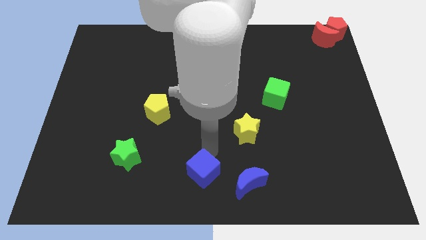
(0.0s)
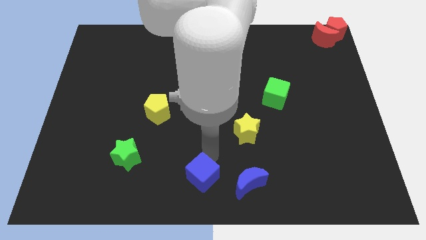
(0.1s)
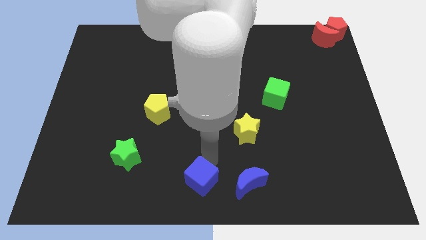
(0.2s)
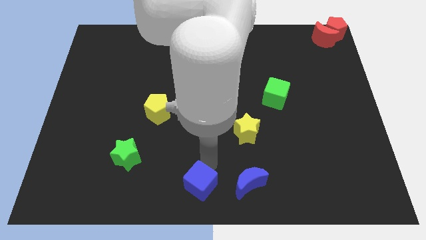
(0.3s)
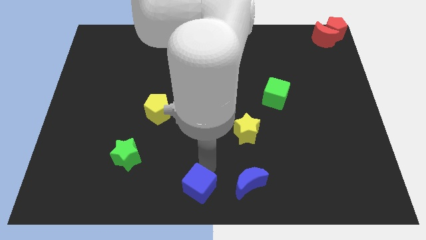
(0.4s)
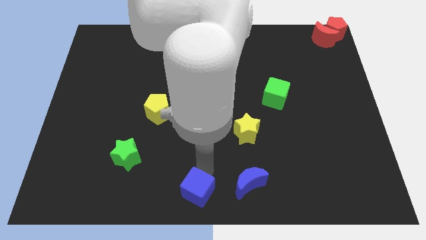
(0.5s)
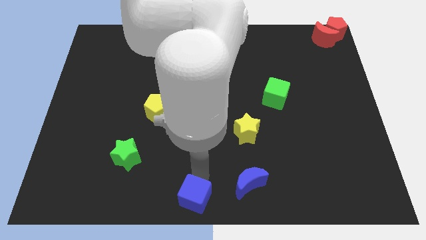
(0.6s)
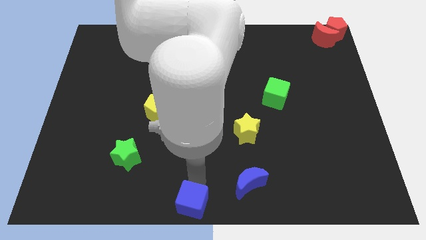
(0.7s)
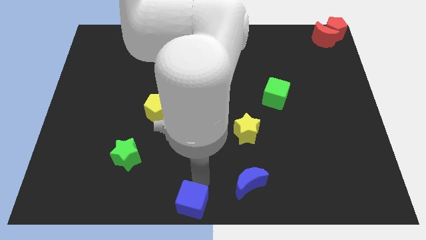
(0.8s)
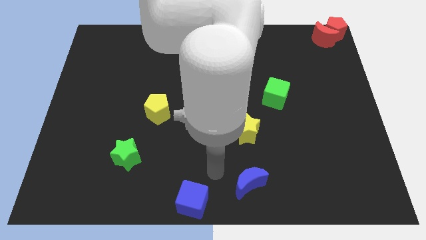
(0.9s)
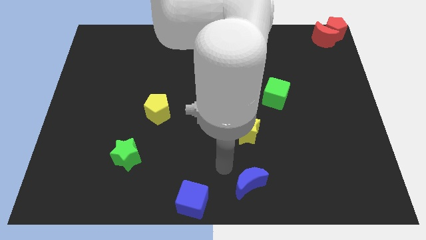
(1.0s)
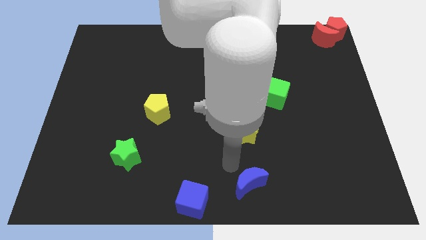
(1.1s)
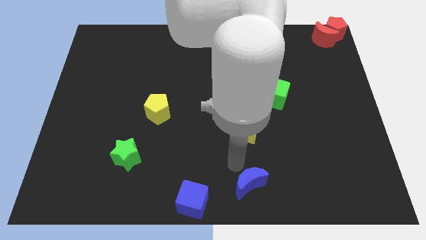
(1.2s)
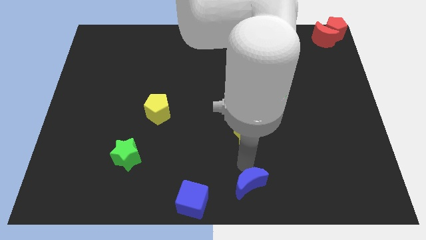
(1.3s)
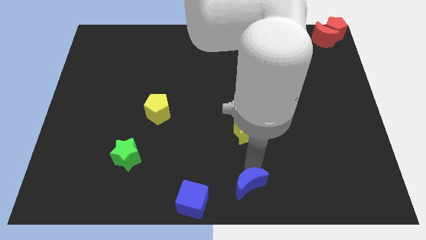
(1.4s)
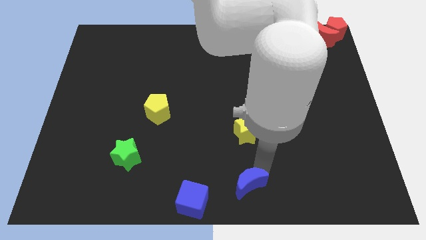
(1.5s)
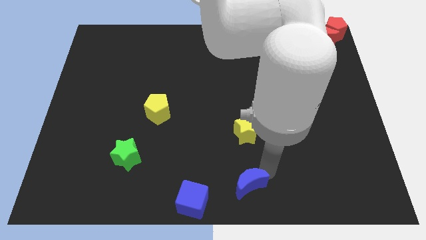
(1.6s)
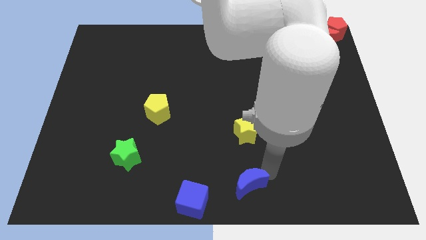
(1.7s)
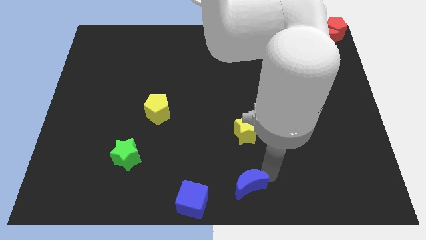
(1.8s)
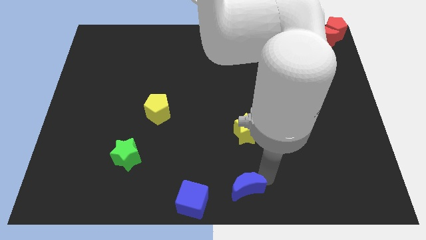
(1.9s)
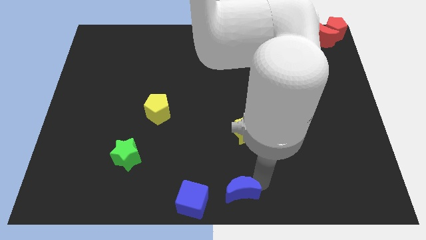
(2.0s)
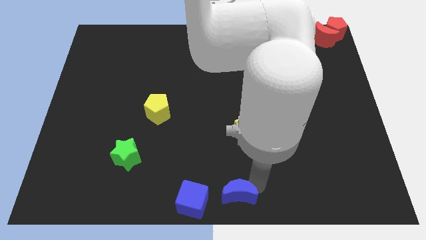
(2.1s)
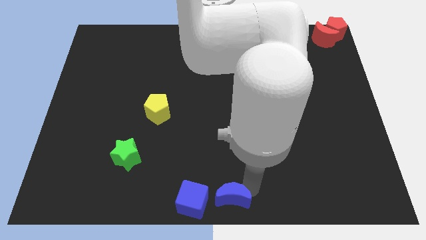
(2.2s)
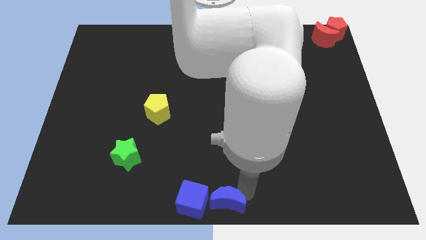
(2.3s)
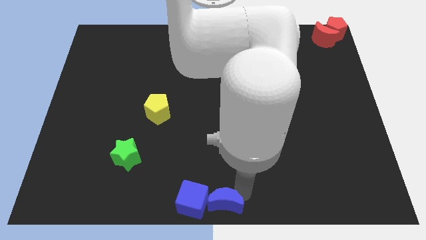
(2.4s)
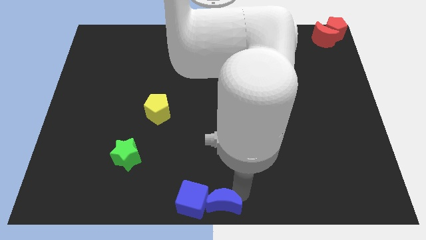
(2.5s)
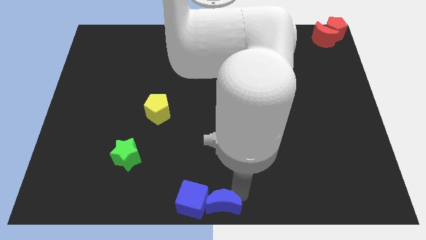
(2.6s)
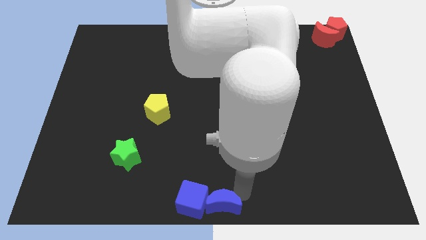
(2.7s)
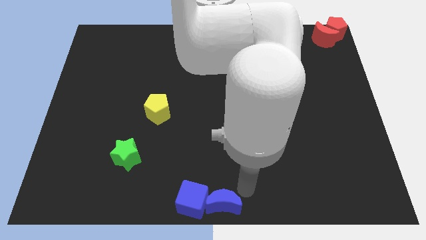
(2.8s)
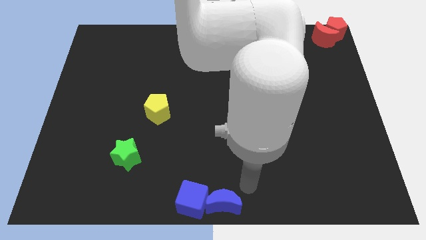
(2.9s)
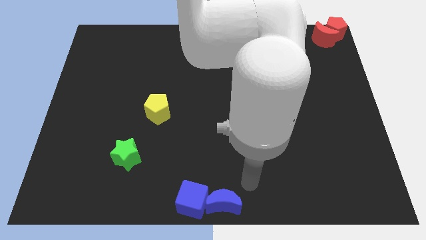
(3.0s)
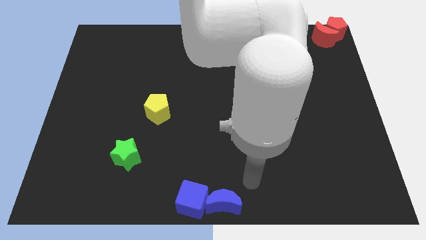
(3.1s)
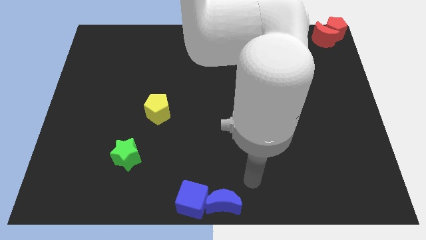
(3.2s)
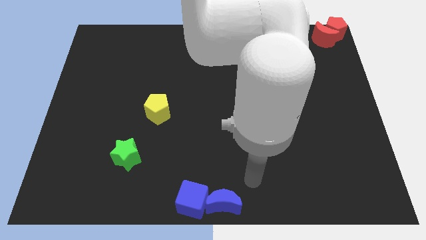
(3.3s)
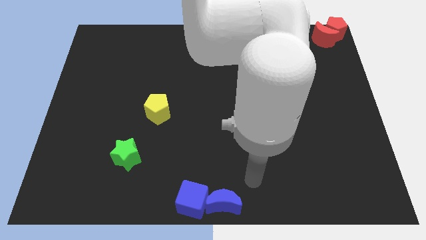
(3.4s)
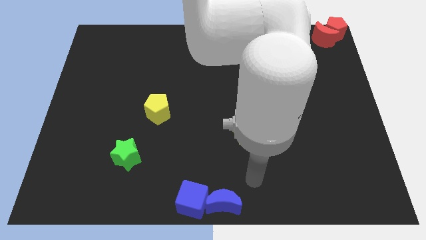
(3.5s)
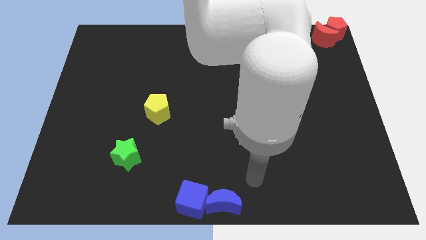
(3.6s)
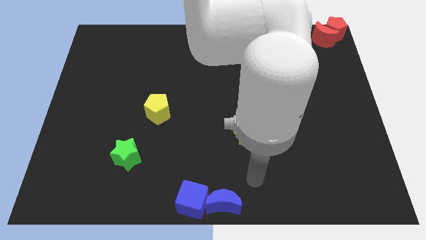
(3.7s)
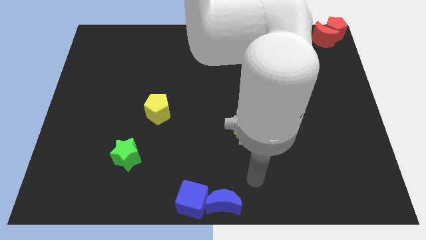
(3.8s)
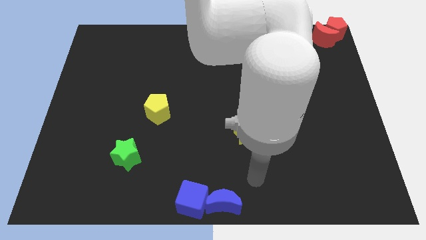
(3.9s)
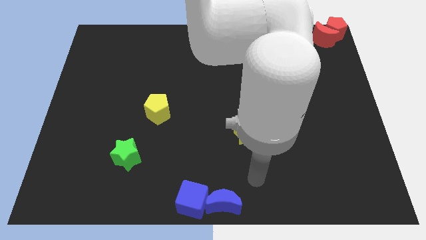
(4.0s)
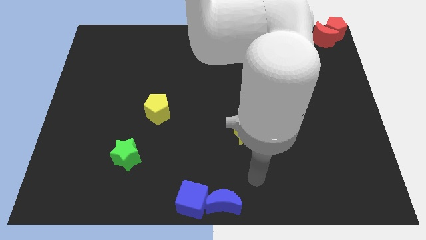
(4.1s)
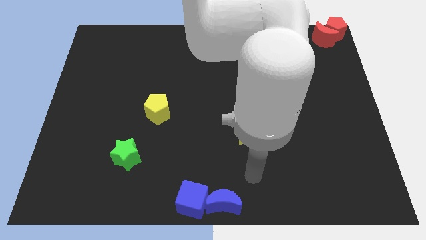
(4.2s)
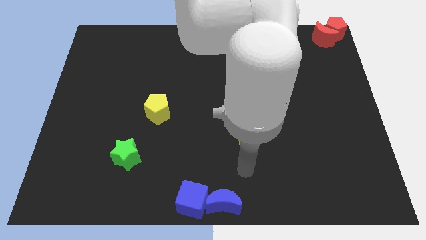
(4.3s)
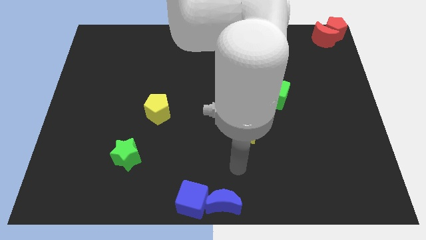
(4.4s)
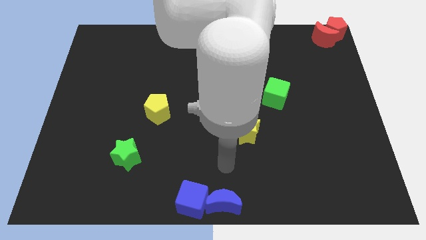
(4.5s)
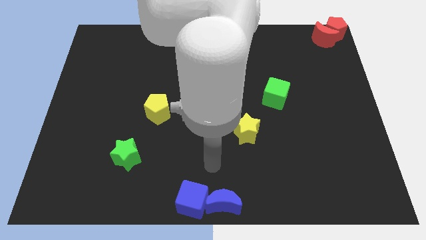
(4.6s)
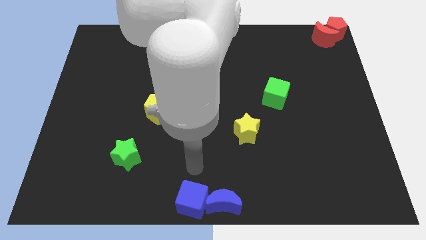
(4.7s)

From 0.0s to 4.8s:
place the blue cube in the bottom center

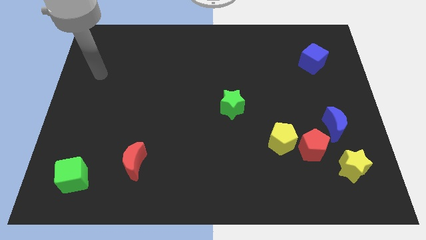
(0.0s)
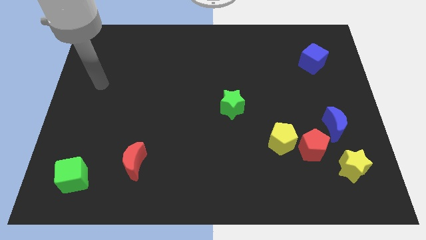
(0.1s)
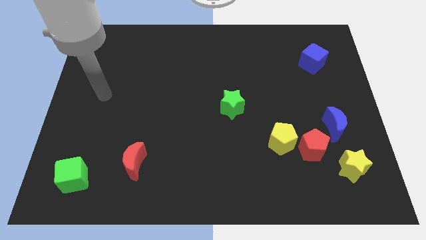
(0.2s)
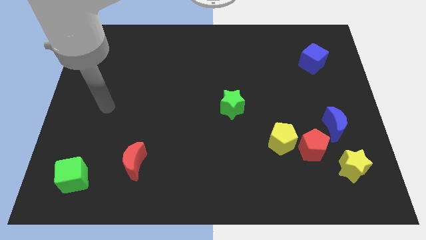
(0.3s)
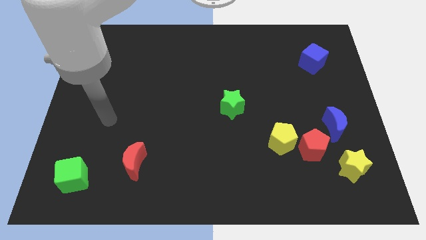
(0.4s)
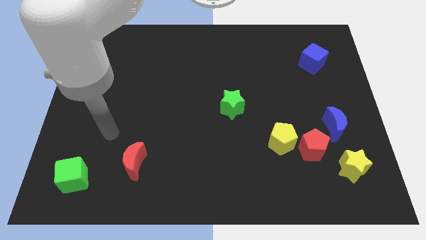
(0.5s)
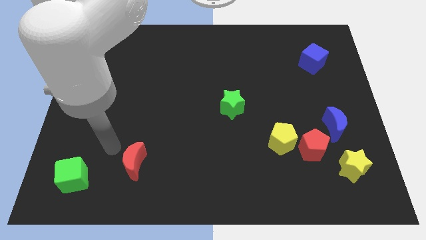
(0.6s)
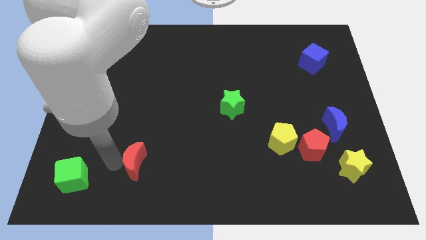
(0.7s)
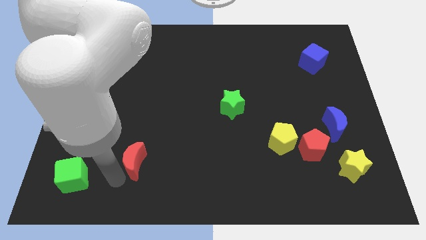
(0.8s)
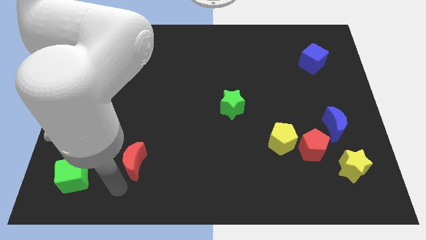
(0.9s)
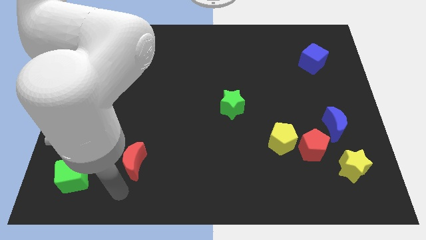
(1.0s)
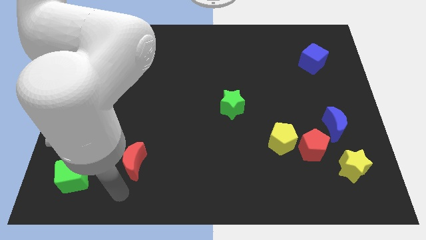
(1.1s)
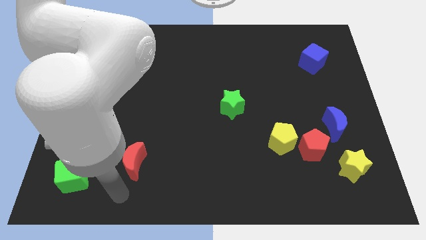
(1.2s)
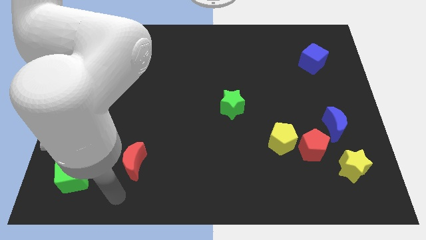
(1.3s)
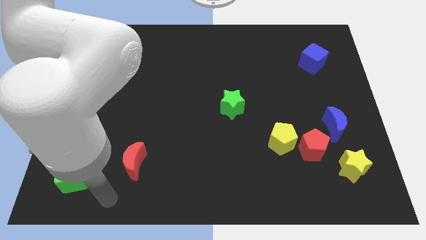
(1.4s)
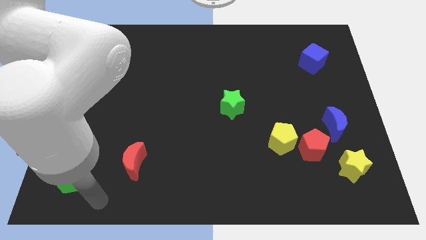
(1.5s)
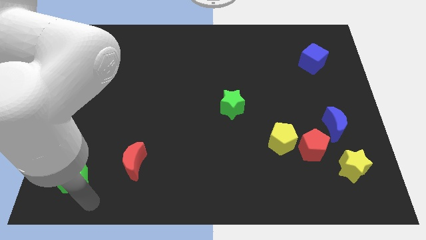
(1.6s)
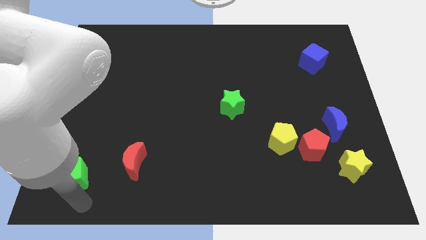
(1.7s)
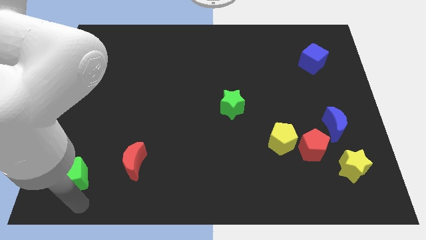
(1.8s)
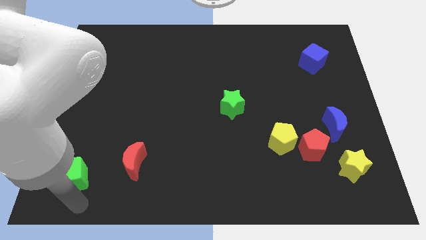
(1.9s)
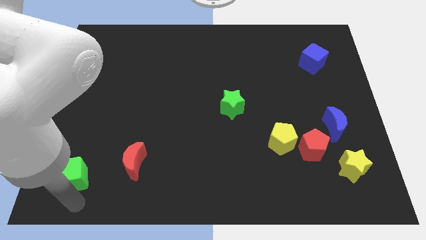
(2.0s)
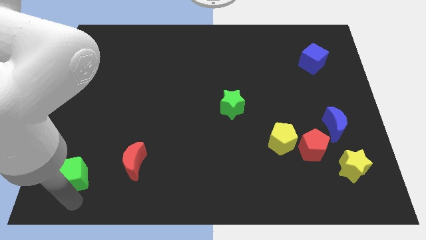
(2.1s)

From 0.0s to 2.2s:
move your hand to the bottom side of the green cube

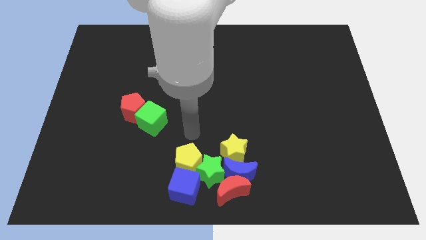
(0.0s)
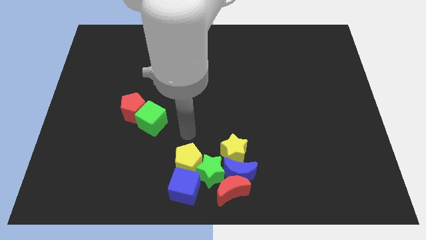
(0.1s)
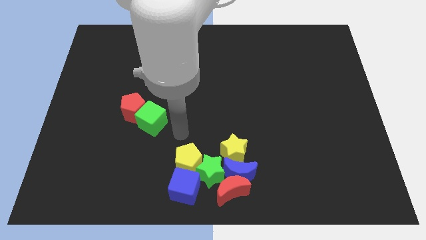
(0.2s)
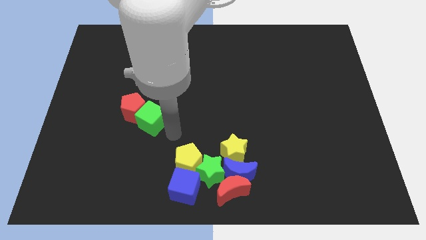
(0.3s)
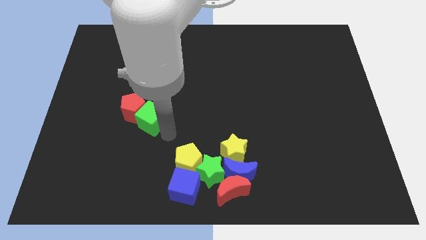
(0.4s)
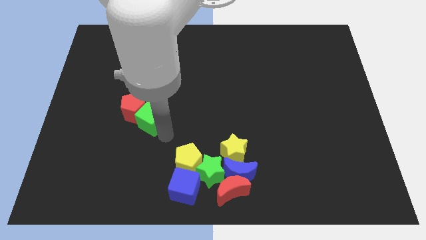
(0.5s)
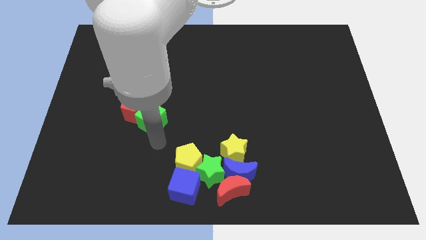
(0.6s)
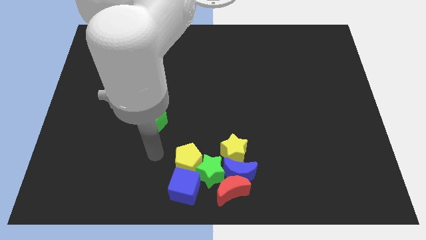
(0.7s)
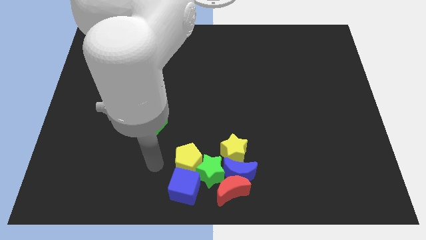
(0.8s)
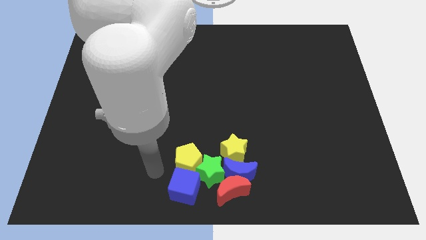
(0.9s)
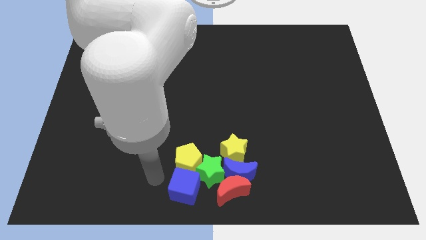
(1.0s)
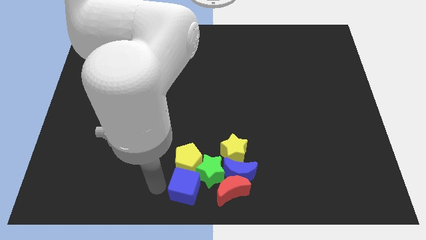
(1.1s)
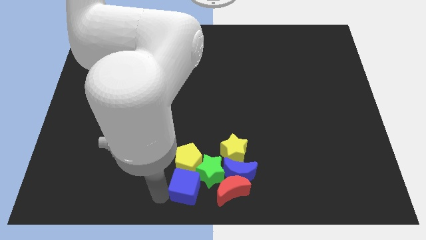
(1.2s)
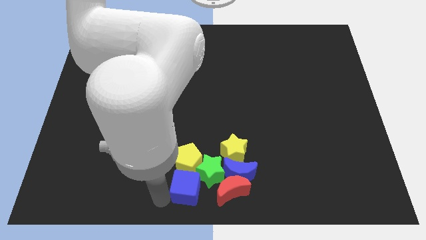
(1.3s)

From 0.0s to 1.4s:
place the arm left to the blue cube

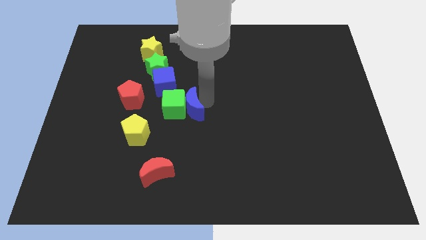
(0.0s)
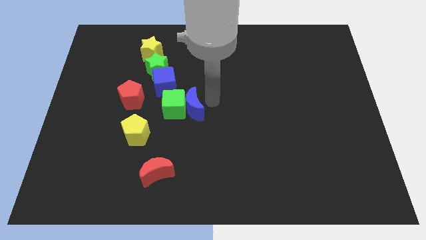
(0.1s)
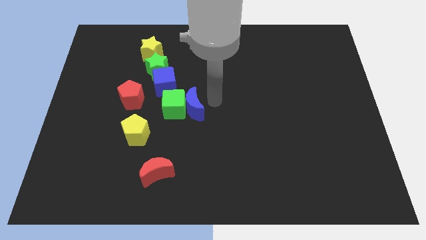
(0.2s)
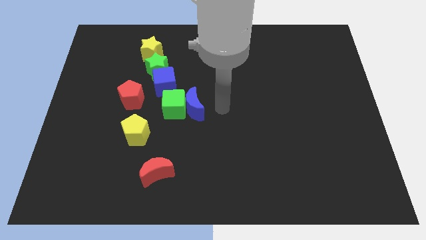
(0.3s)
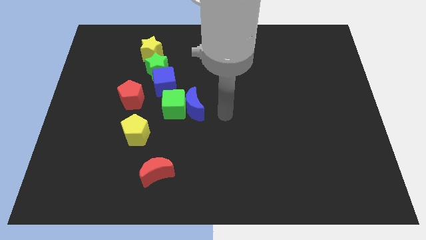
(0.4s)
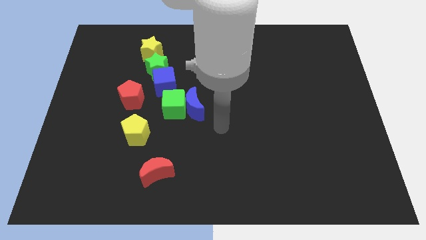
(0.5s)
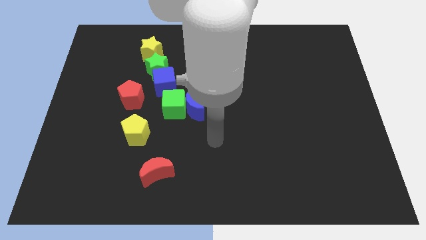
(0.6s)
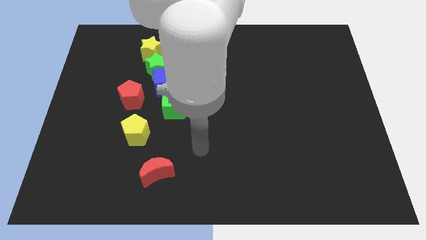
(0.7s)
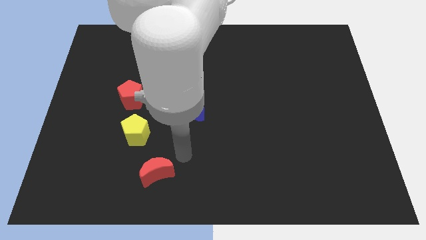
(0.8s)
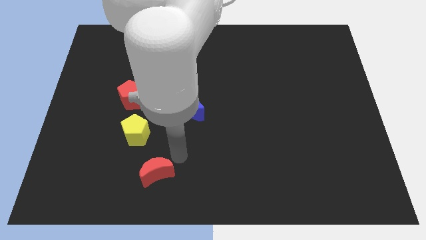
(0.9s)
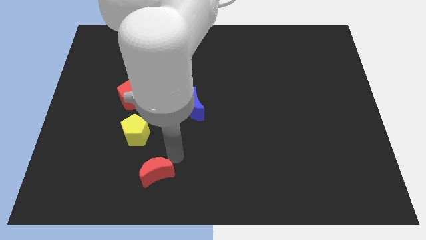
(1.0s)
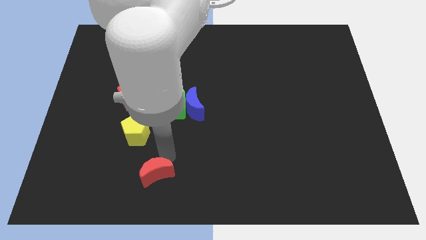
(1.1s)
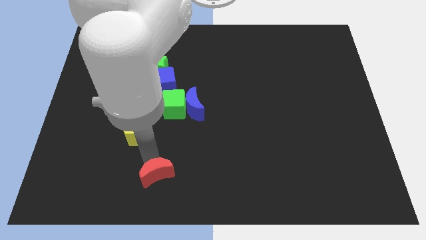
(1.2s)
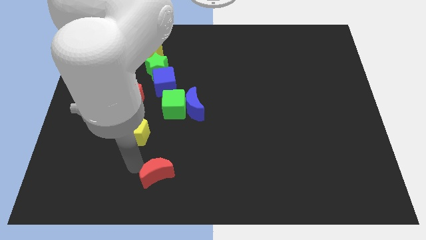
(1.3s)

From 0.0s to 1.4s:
put your hand vertically above the red moon
